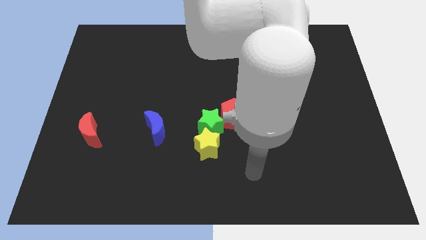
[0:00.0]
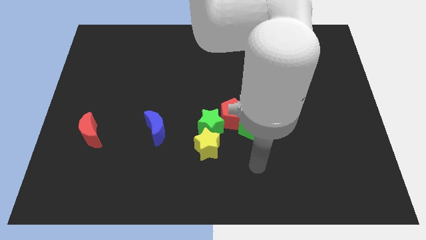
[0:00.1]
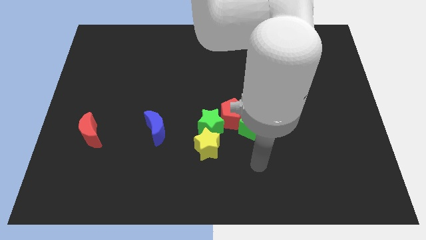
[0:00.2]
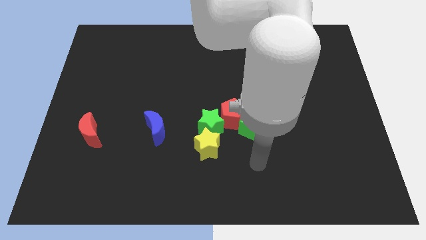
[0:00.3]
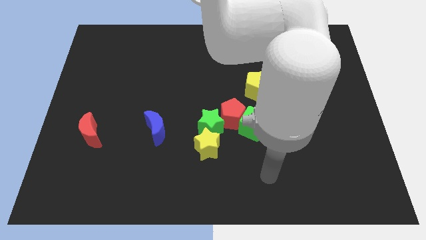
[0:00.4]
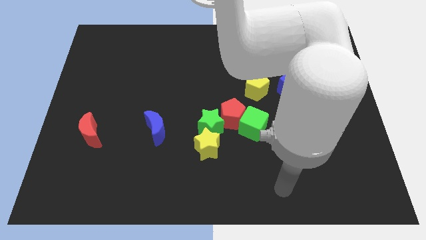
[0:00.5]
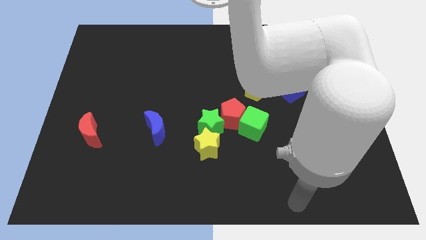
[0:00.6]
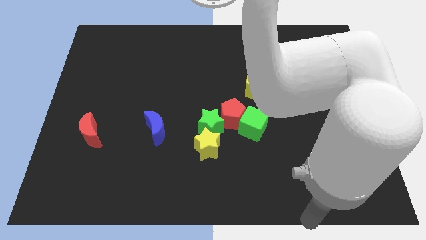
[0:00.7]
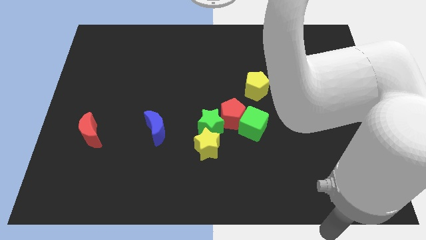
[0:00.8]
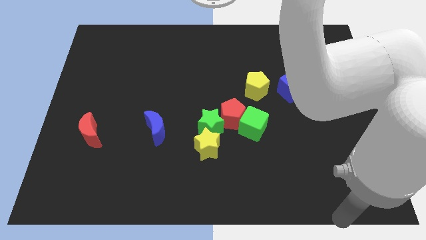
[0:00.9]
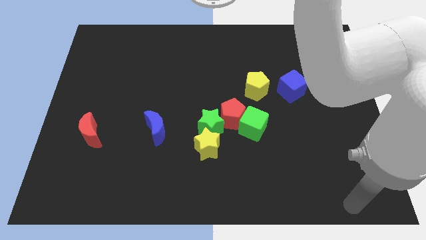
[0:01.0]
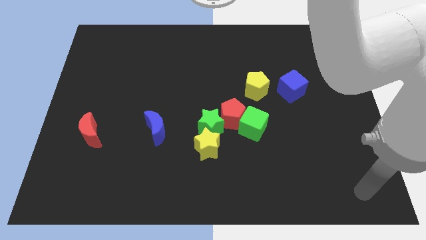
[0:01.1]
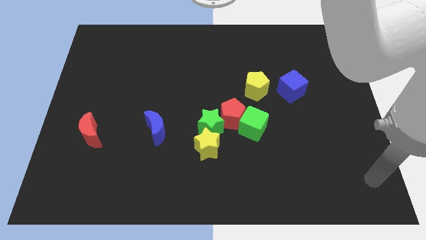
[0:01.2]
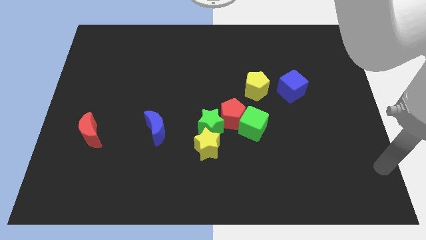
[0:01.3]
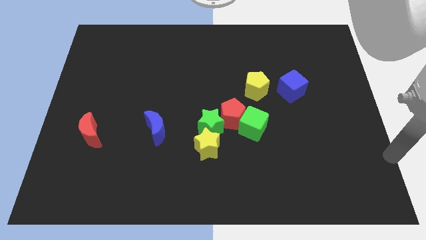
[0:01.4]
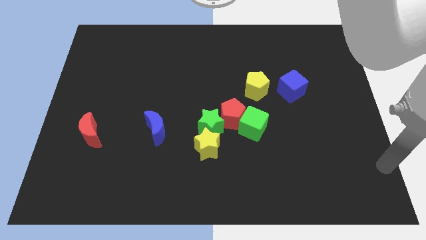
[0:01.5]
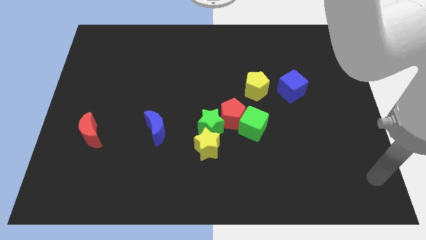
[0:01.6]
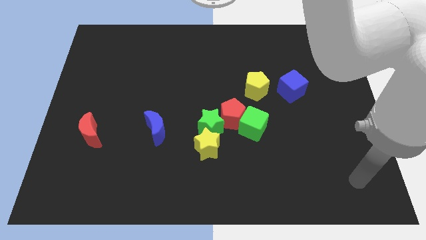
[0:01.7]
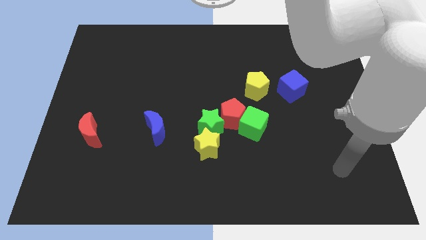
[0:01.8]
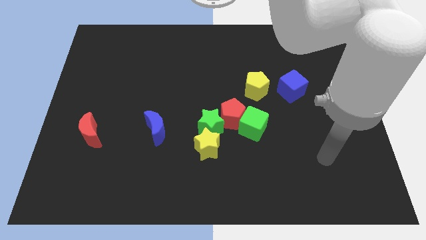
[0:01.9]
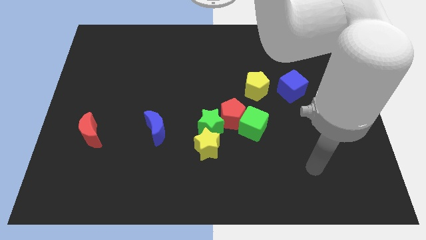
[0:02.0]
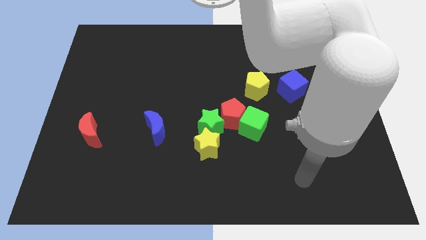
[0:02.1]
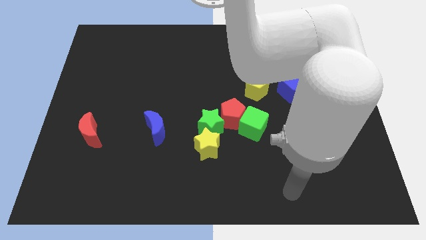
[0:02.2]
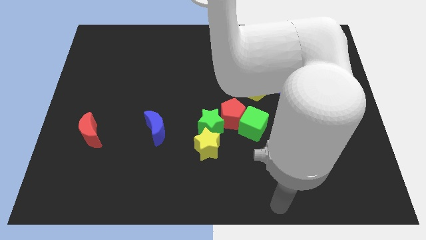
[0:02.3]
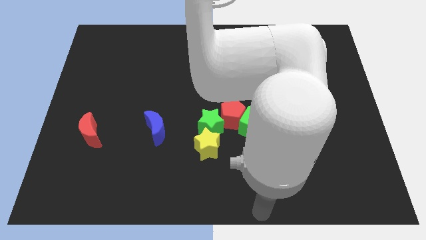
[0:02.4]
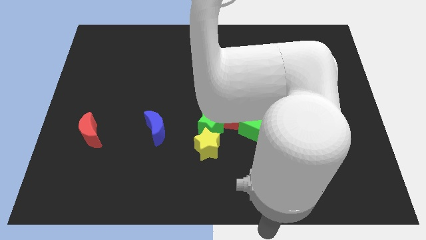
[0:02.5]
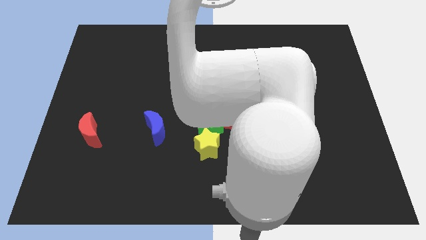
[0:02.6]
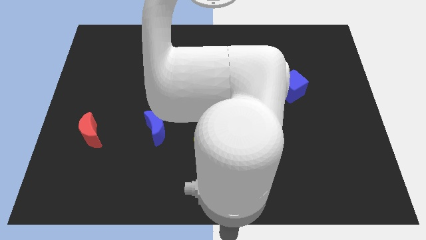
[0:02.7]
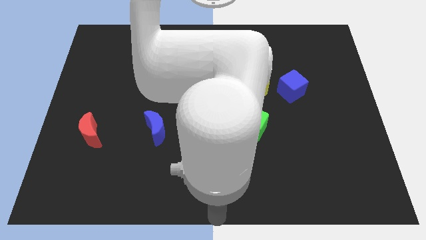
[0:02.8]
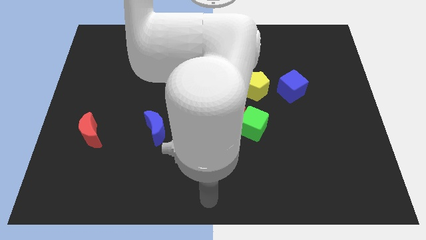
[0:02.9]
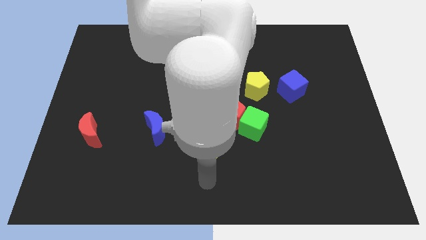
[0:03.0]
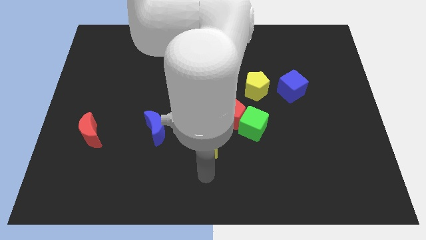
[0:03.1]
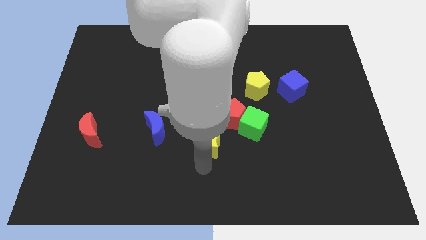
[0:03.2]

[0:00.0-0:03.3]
move your arm towards the yellow star

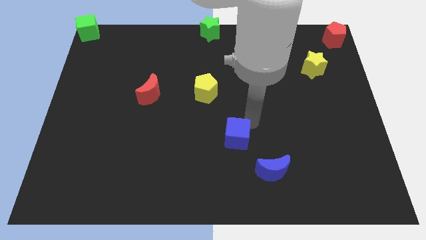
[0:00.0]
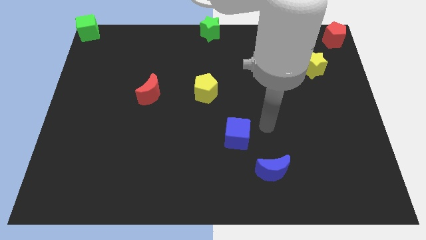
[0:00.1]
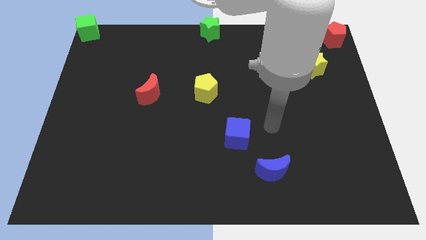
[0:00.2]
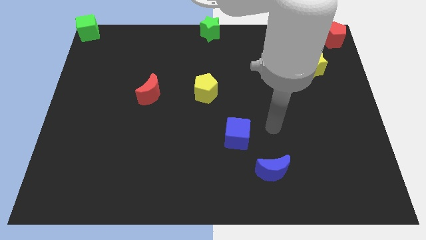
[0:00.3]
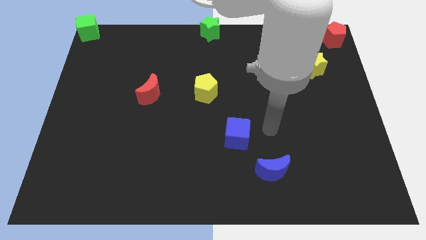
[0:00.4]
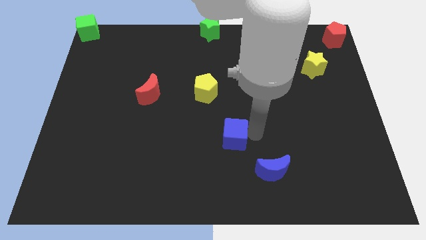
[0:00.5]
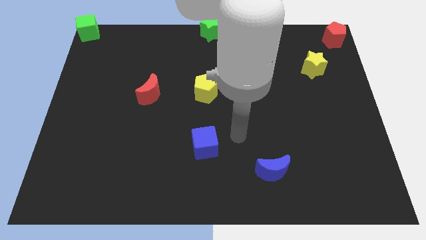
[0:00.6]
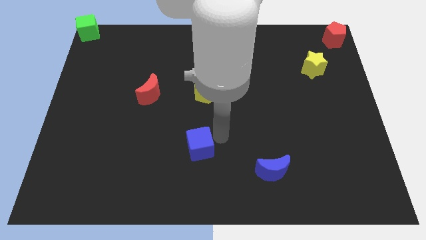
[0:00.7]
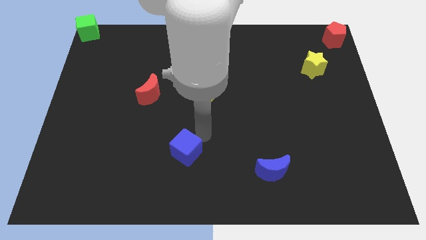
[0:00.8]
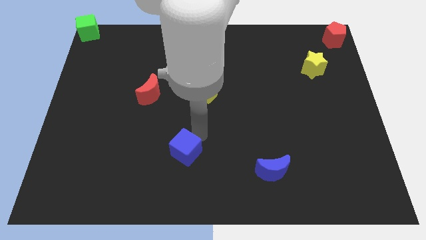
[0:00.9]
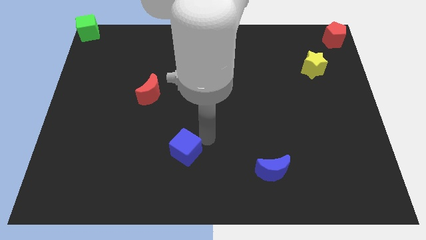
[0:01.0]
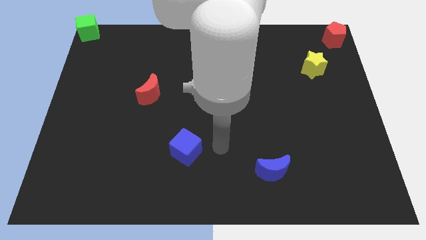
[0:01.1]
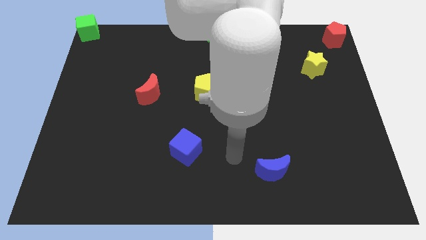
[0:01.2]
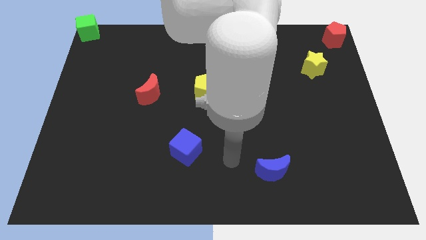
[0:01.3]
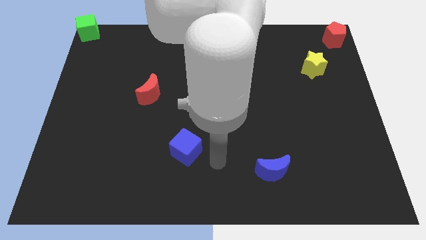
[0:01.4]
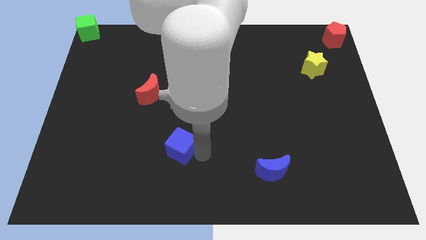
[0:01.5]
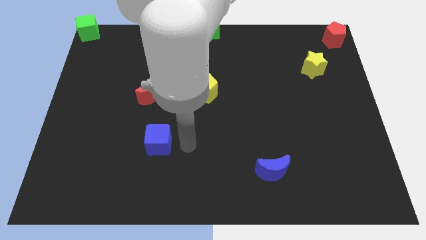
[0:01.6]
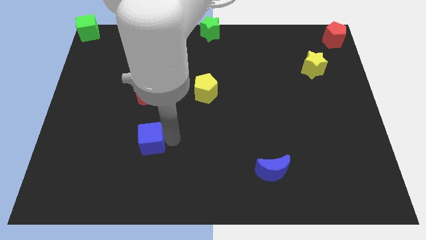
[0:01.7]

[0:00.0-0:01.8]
push blue cube below red crescent

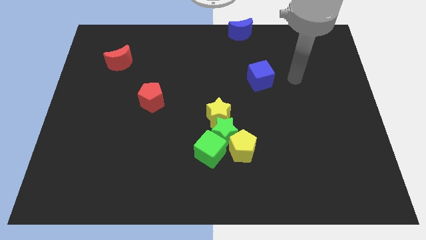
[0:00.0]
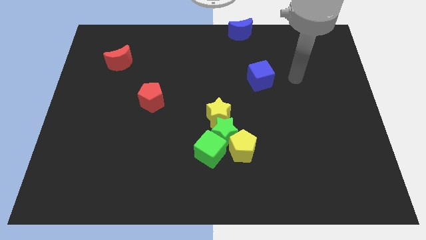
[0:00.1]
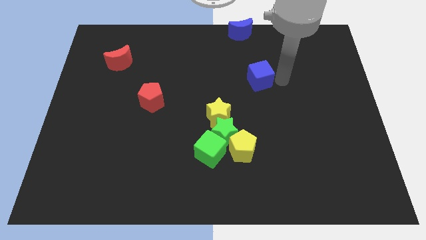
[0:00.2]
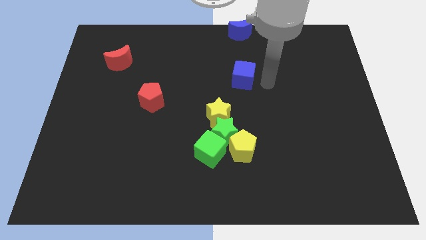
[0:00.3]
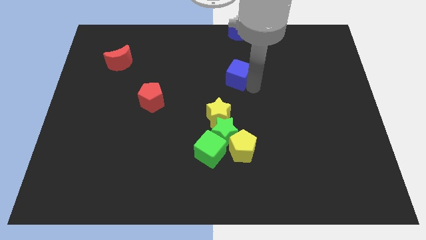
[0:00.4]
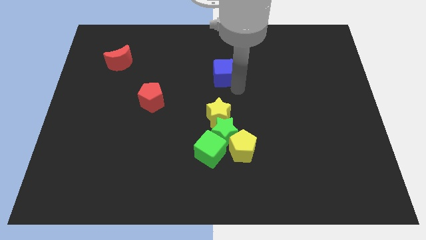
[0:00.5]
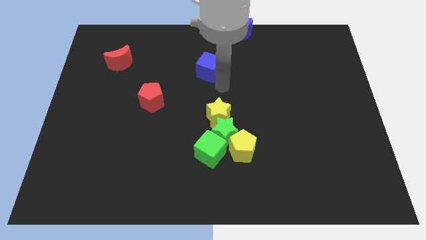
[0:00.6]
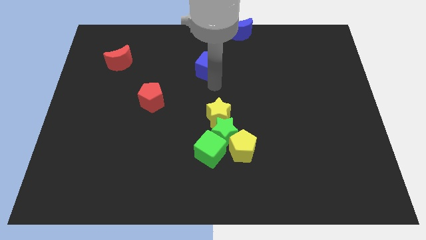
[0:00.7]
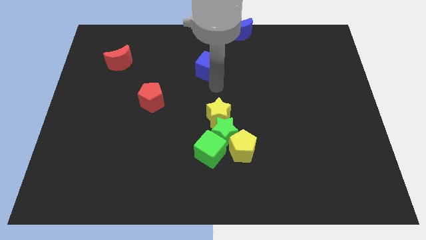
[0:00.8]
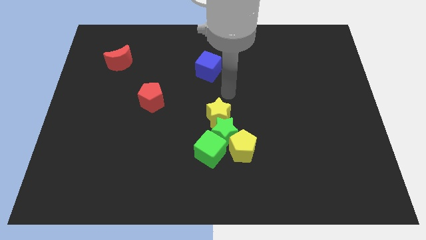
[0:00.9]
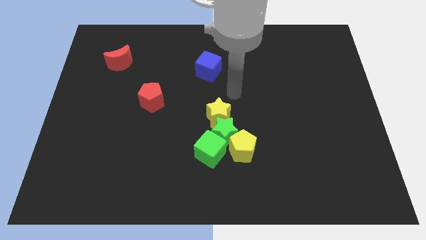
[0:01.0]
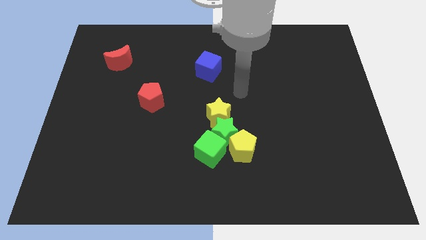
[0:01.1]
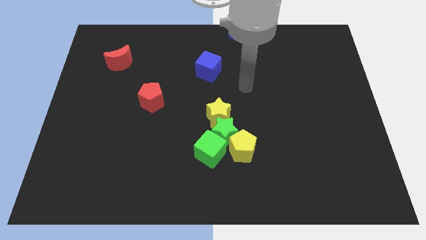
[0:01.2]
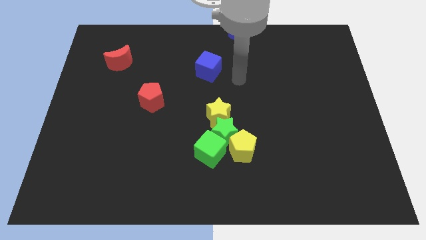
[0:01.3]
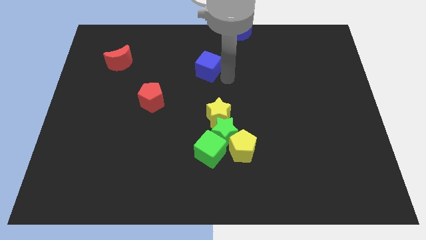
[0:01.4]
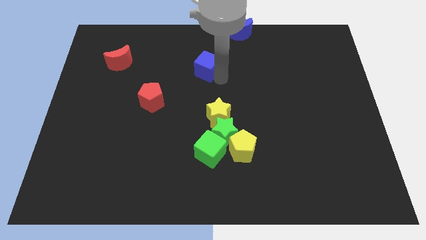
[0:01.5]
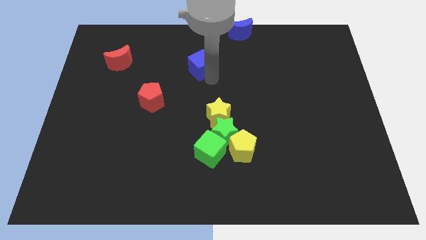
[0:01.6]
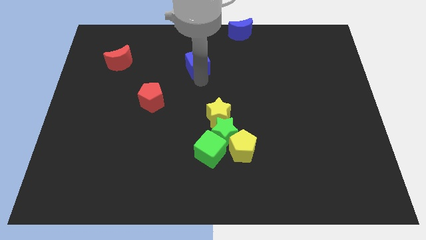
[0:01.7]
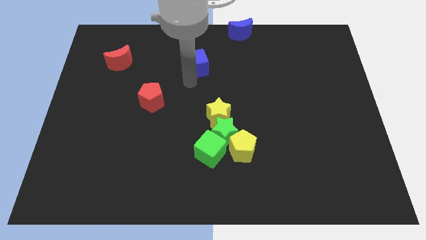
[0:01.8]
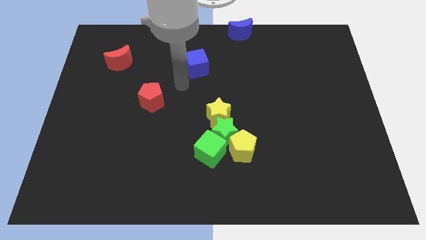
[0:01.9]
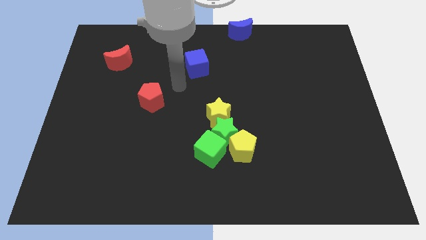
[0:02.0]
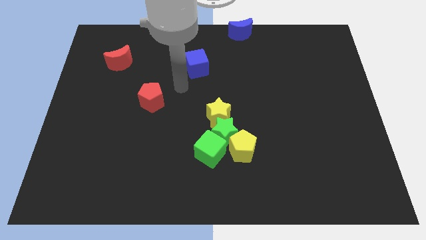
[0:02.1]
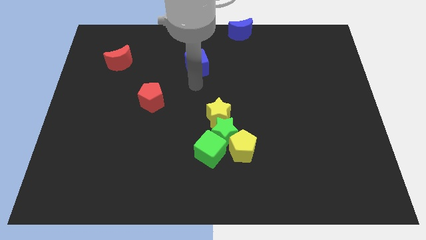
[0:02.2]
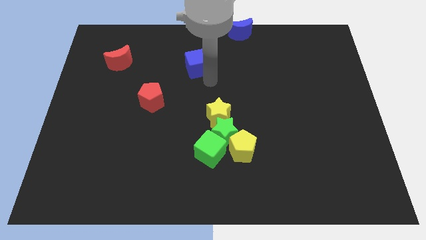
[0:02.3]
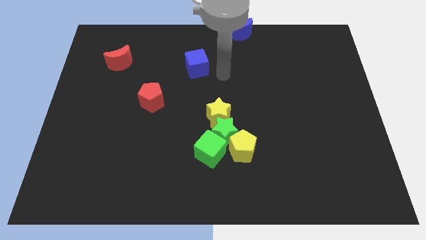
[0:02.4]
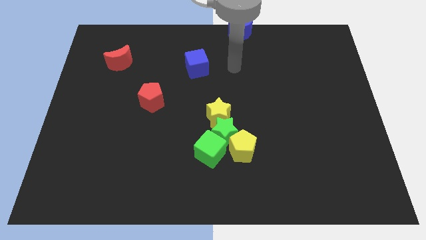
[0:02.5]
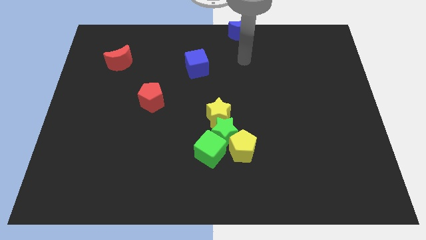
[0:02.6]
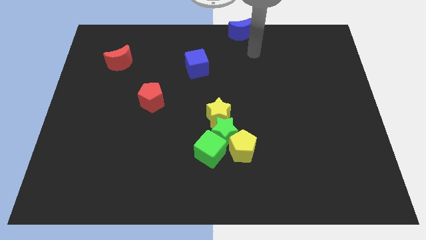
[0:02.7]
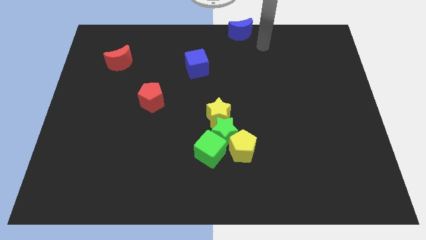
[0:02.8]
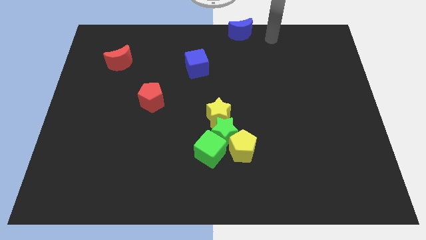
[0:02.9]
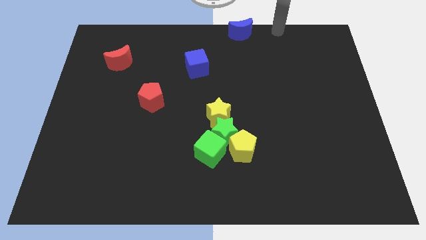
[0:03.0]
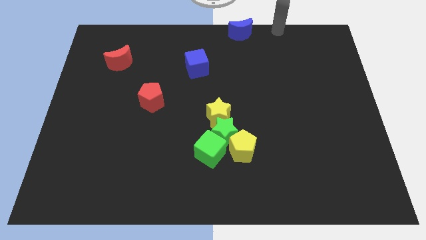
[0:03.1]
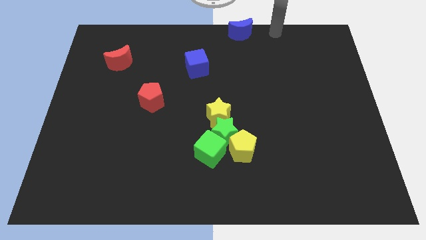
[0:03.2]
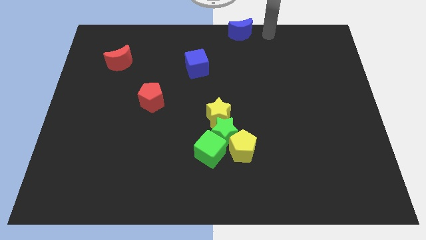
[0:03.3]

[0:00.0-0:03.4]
slide the blue cube towards red crescent

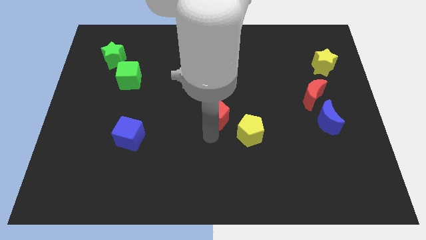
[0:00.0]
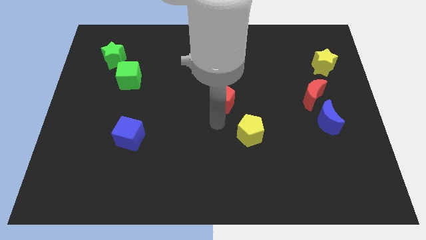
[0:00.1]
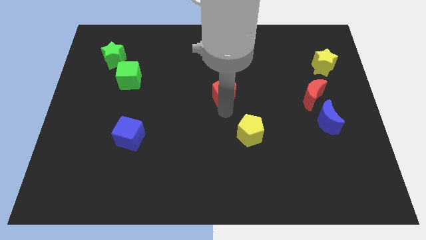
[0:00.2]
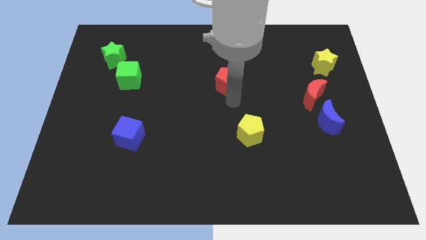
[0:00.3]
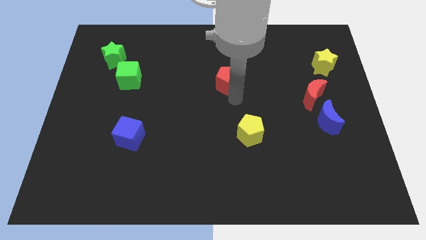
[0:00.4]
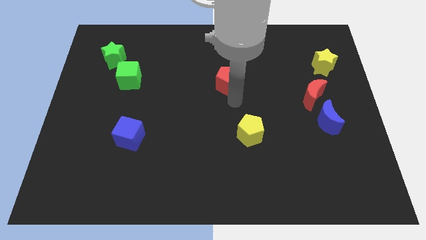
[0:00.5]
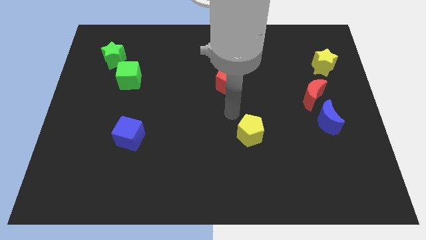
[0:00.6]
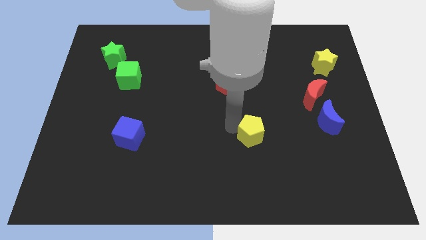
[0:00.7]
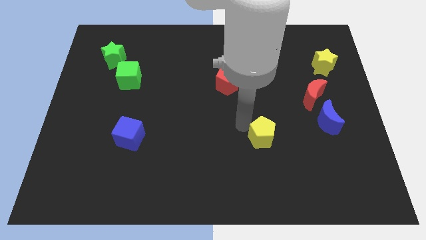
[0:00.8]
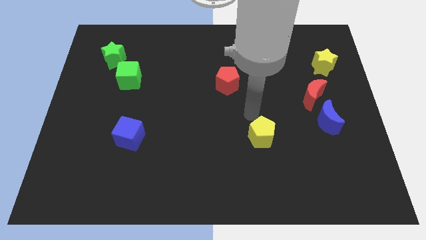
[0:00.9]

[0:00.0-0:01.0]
push the red pentagon diagonal to the blue cube
